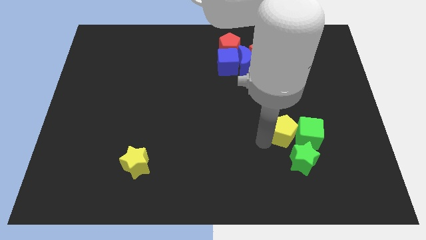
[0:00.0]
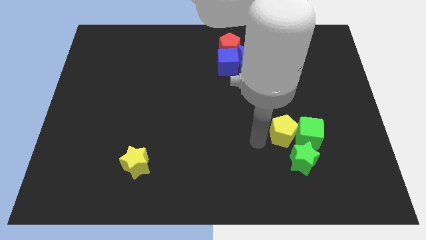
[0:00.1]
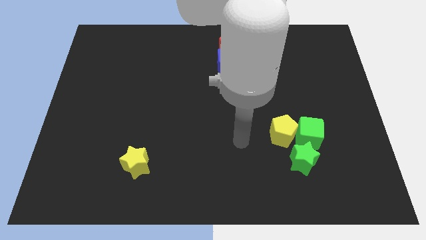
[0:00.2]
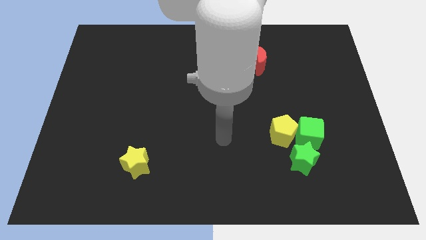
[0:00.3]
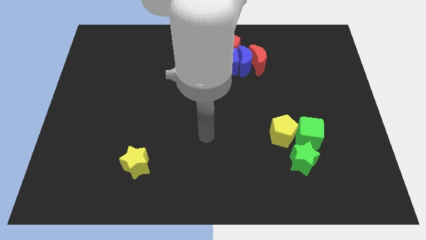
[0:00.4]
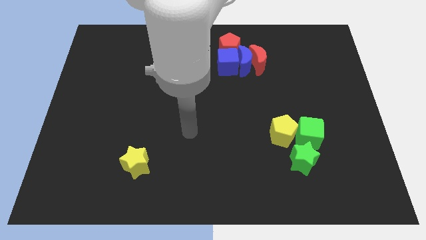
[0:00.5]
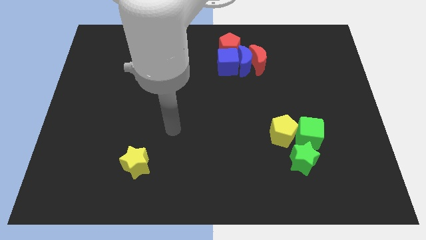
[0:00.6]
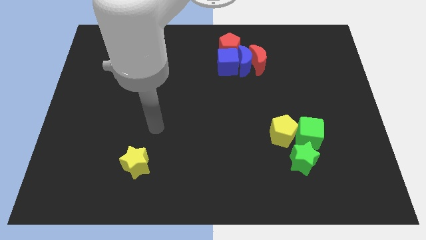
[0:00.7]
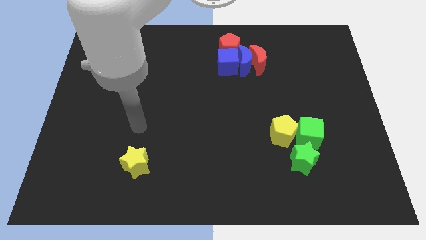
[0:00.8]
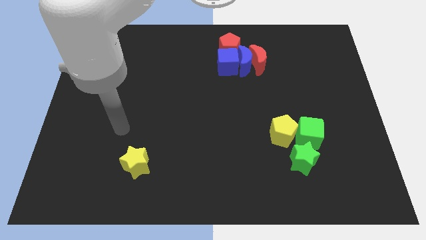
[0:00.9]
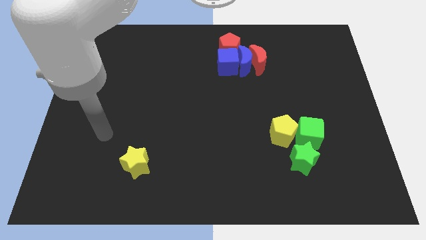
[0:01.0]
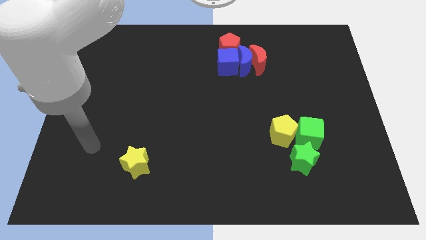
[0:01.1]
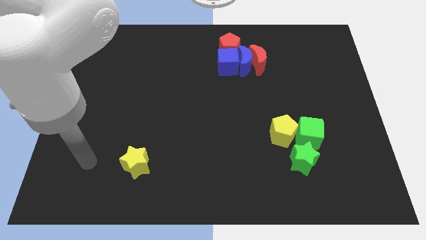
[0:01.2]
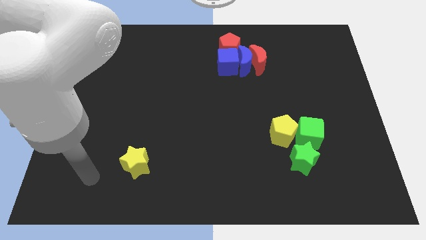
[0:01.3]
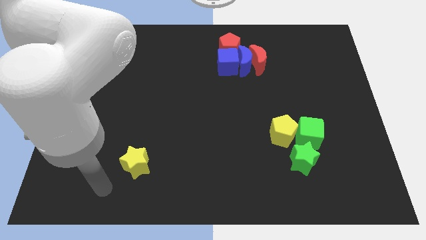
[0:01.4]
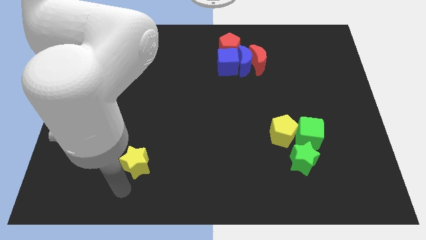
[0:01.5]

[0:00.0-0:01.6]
place your arm below the yellow star

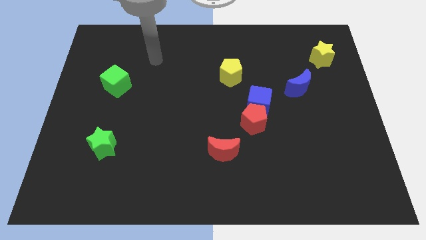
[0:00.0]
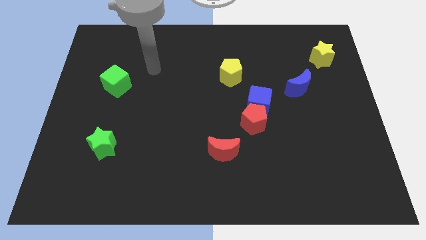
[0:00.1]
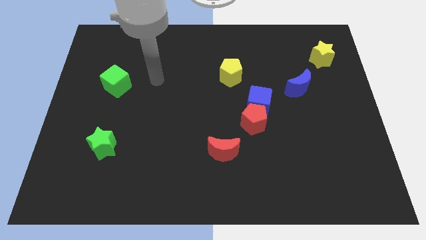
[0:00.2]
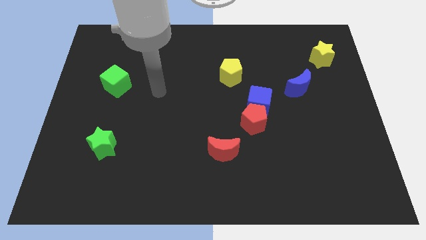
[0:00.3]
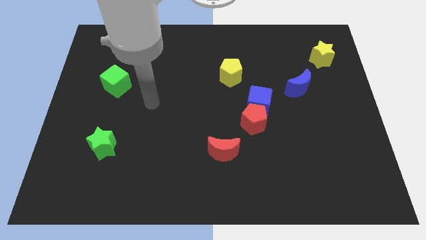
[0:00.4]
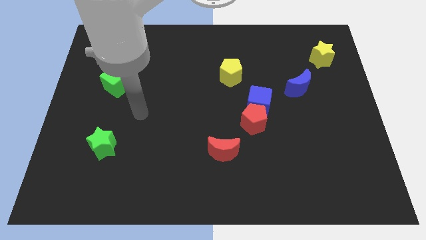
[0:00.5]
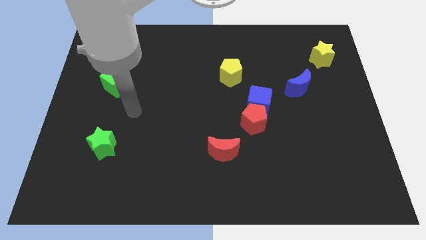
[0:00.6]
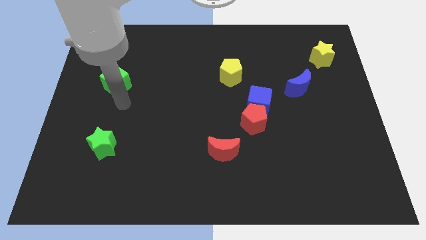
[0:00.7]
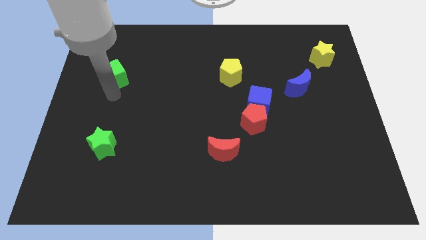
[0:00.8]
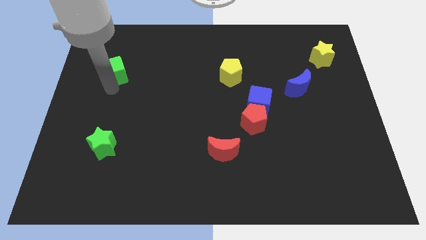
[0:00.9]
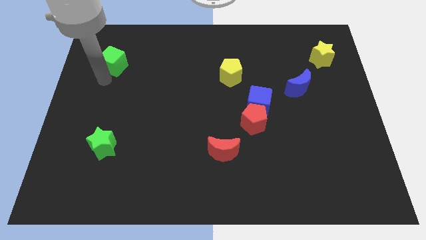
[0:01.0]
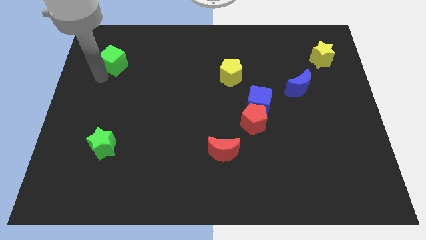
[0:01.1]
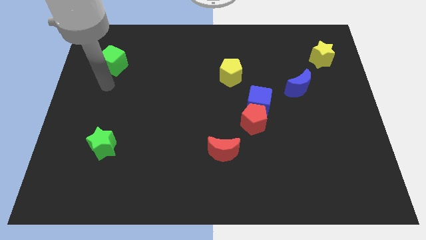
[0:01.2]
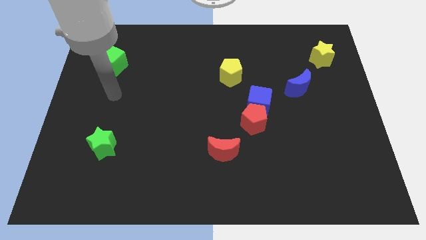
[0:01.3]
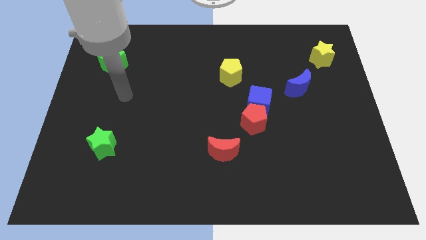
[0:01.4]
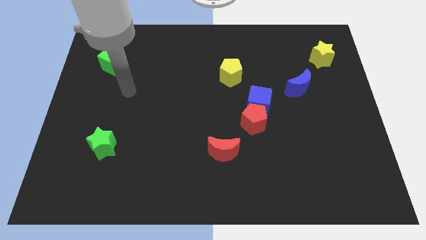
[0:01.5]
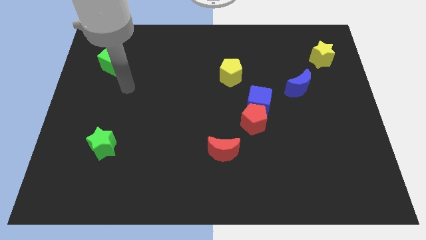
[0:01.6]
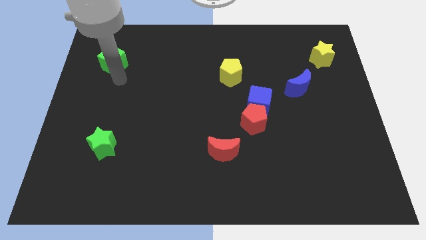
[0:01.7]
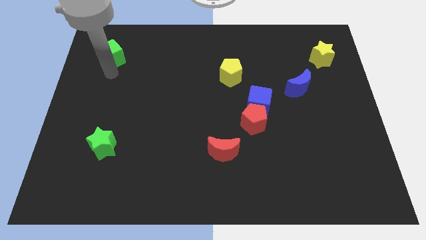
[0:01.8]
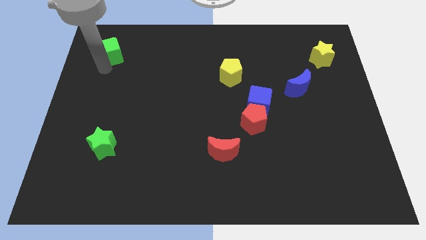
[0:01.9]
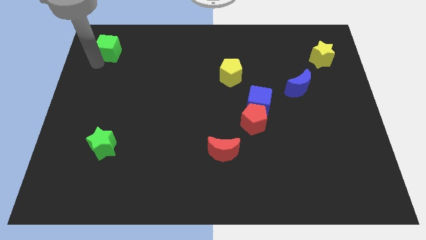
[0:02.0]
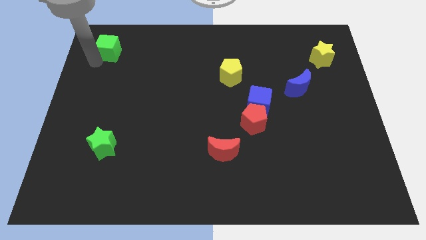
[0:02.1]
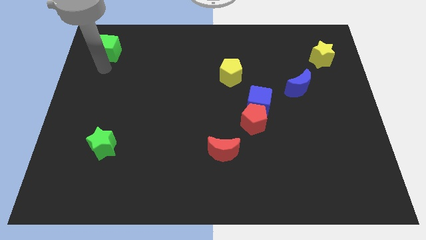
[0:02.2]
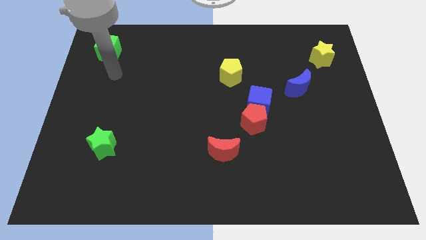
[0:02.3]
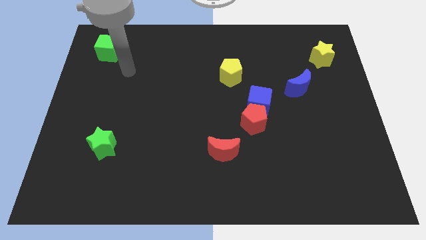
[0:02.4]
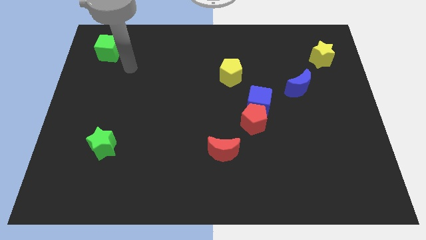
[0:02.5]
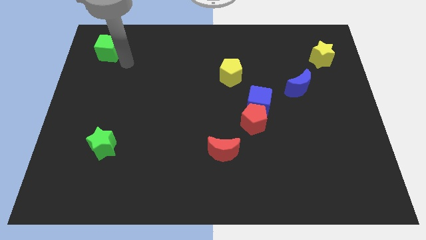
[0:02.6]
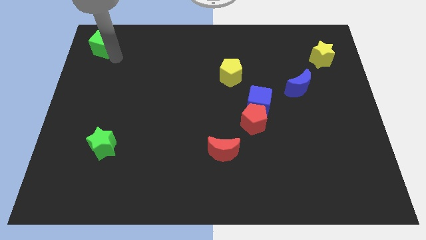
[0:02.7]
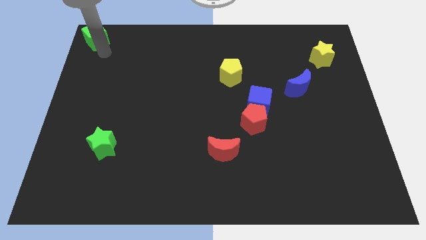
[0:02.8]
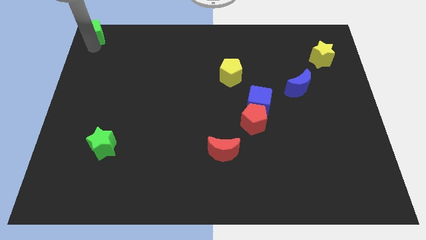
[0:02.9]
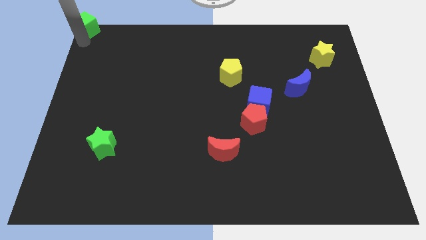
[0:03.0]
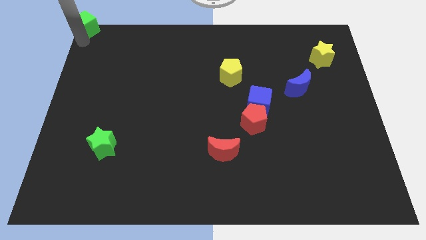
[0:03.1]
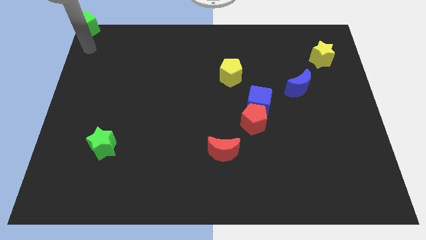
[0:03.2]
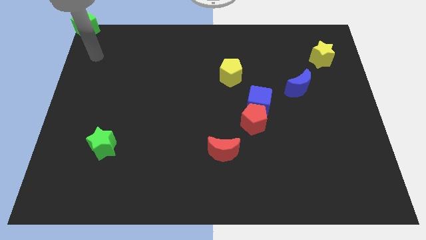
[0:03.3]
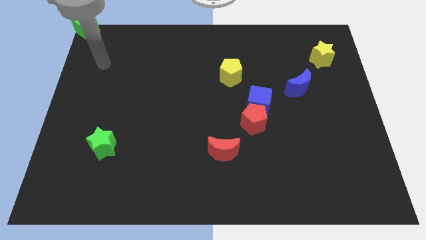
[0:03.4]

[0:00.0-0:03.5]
move the green cube to the top left

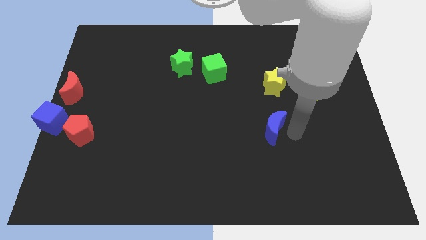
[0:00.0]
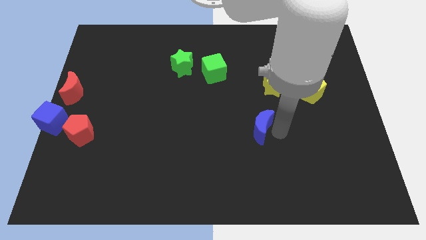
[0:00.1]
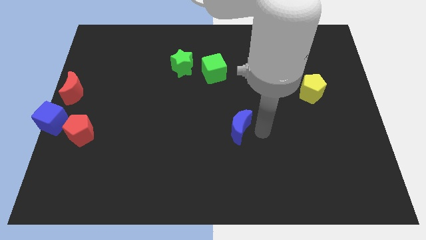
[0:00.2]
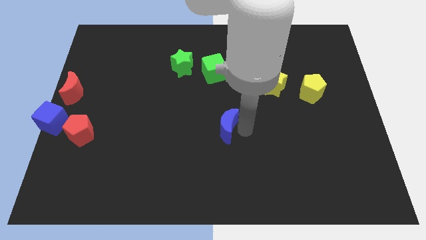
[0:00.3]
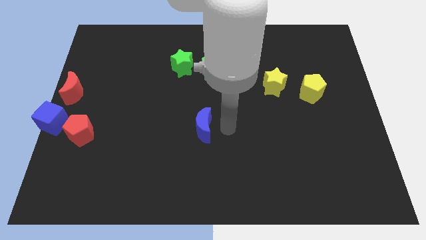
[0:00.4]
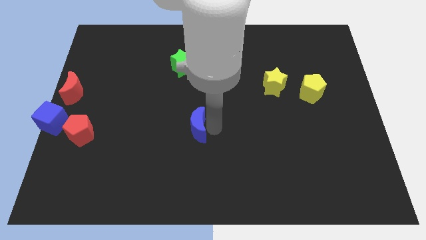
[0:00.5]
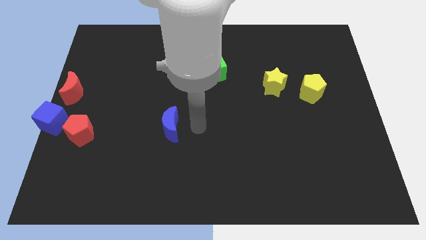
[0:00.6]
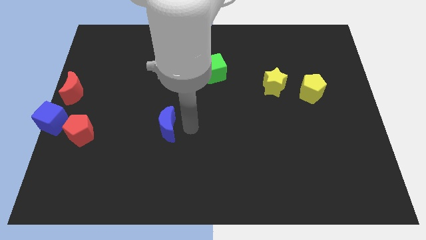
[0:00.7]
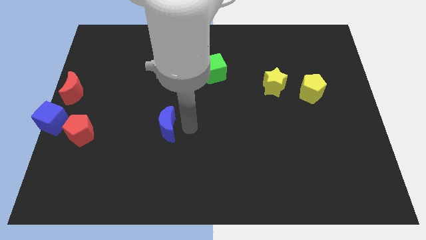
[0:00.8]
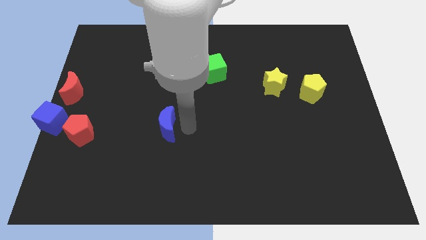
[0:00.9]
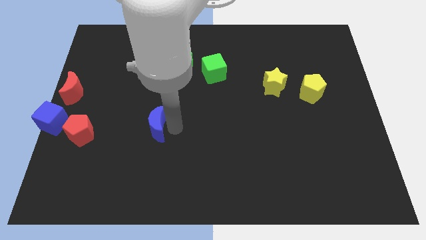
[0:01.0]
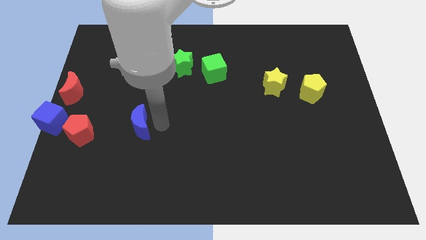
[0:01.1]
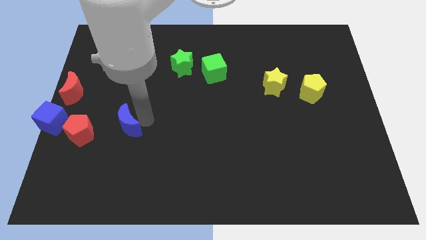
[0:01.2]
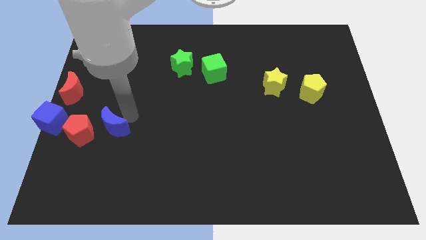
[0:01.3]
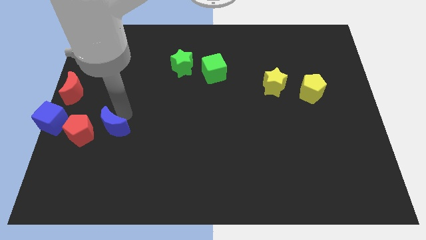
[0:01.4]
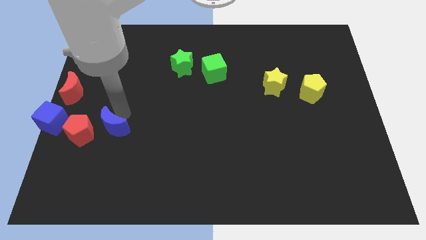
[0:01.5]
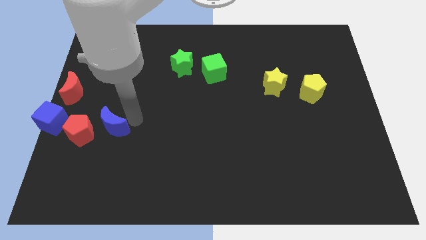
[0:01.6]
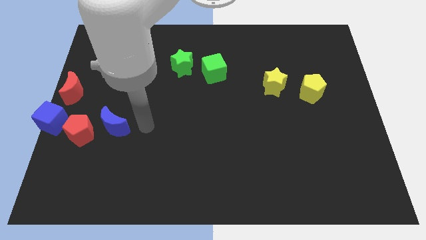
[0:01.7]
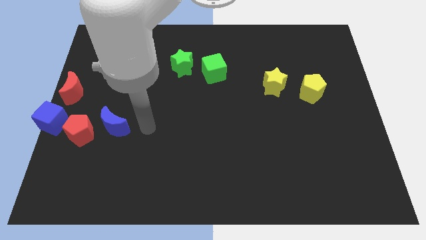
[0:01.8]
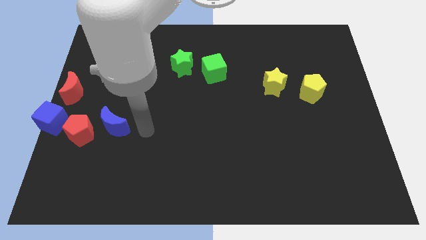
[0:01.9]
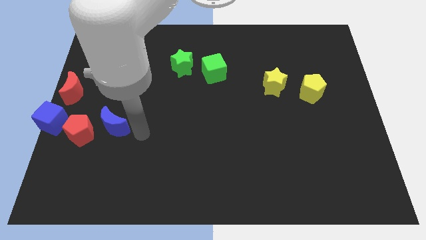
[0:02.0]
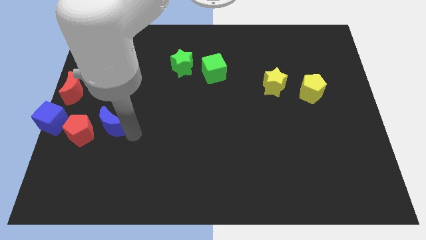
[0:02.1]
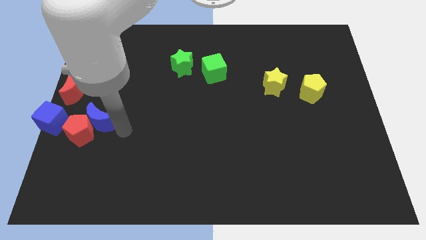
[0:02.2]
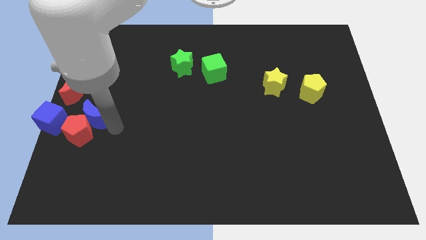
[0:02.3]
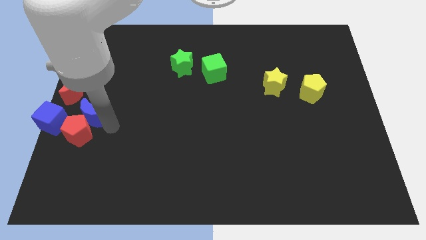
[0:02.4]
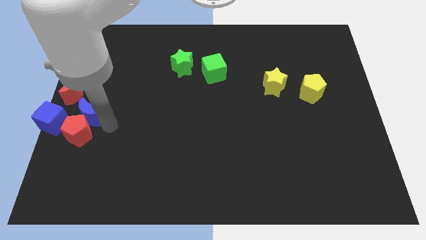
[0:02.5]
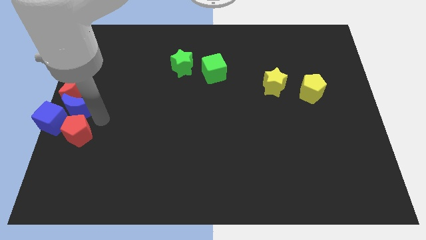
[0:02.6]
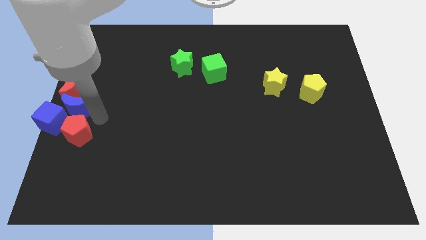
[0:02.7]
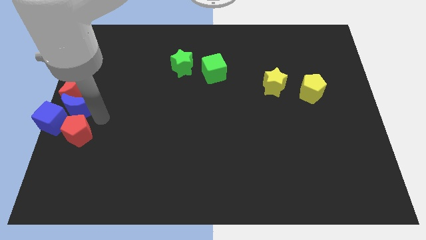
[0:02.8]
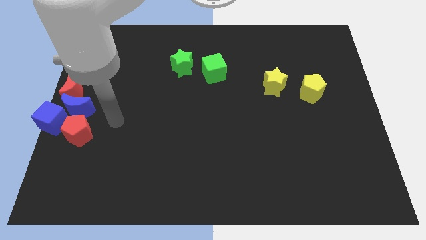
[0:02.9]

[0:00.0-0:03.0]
put the blue moon between the red moon and red pentagon

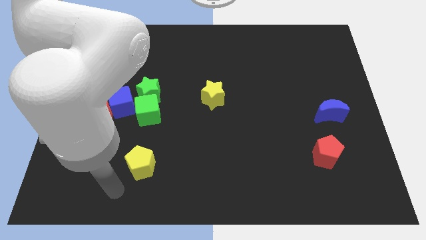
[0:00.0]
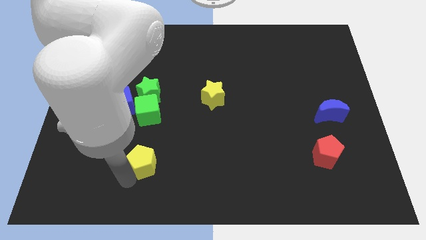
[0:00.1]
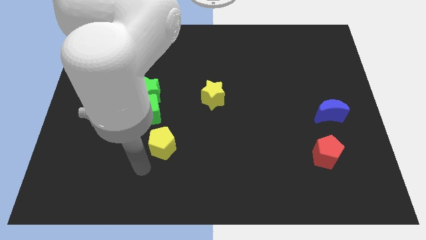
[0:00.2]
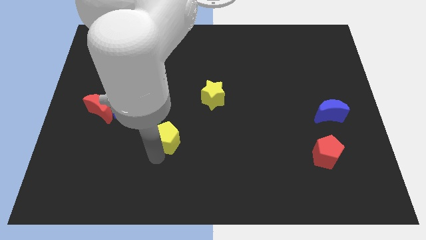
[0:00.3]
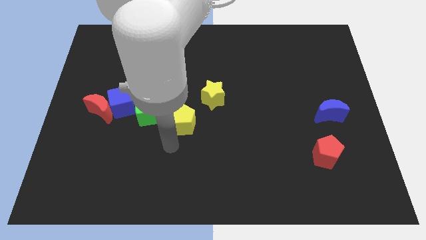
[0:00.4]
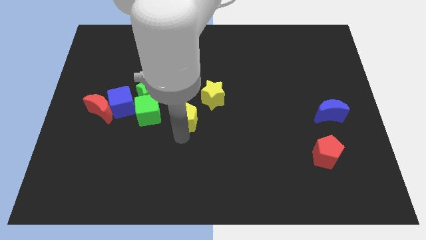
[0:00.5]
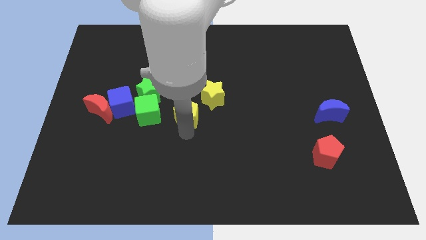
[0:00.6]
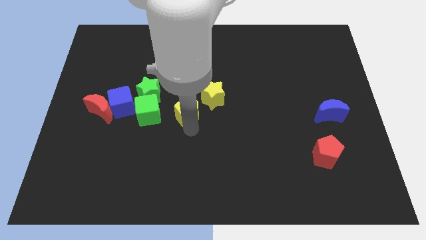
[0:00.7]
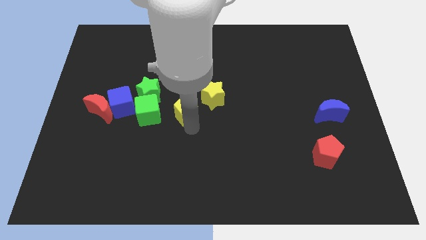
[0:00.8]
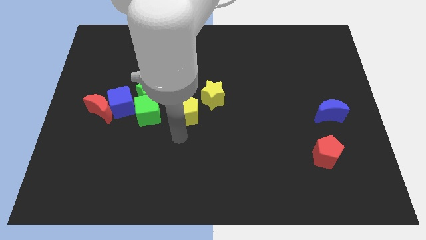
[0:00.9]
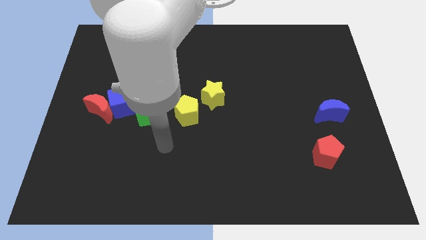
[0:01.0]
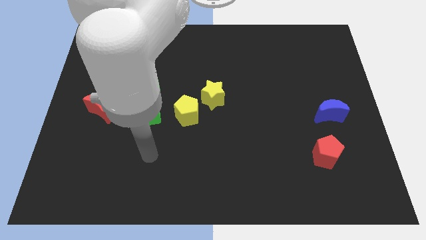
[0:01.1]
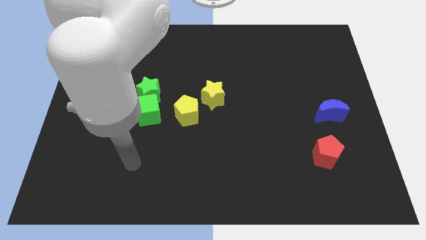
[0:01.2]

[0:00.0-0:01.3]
push the yellow pentagon to the right of green cube
